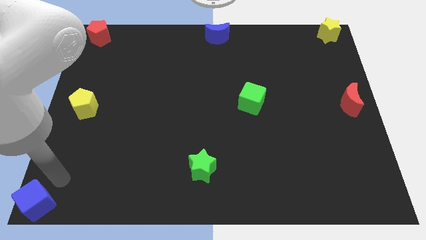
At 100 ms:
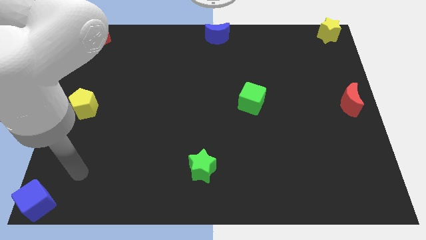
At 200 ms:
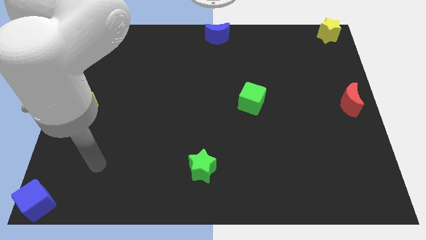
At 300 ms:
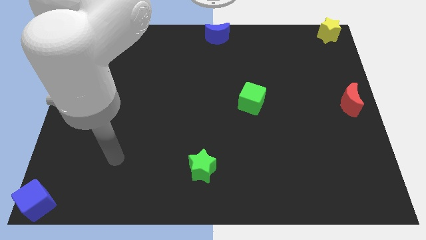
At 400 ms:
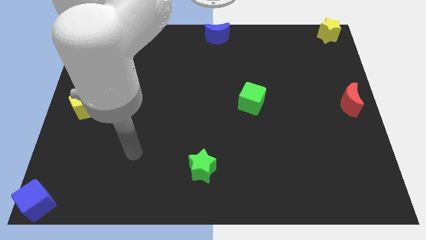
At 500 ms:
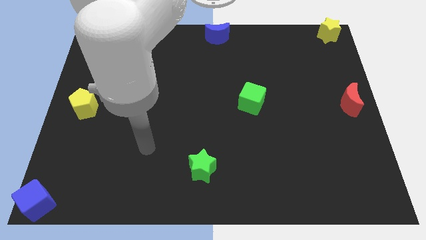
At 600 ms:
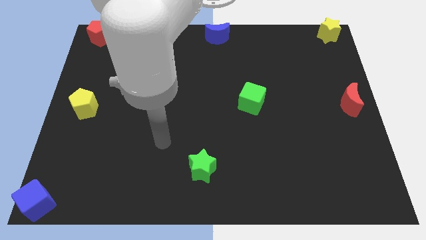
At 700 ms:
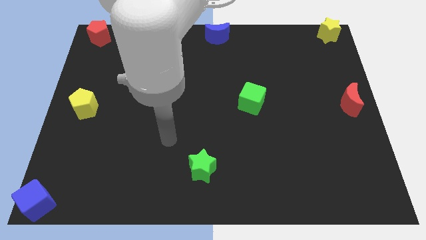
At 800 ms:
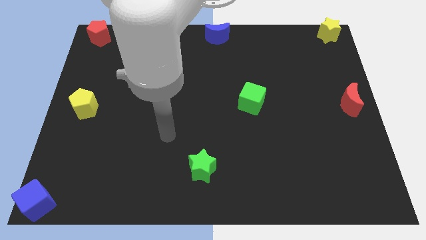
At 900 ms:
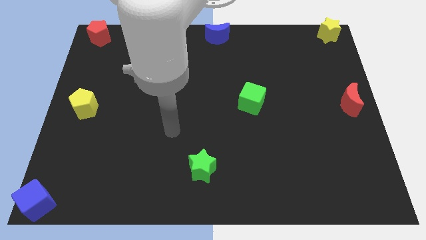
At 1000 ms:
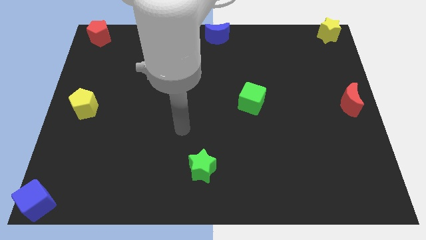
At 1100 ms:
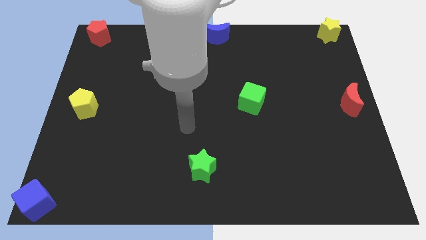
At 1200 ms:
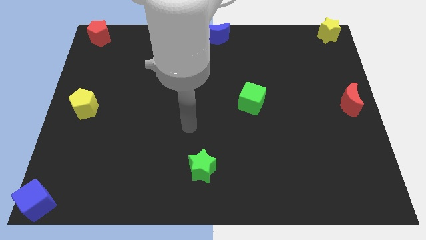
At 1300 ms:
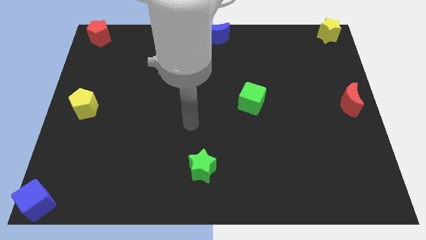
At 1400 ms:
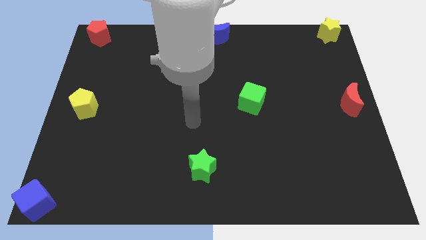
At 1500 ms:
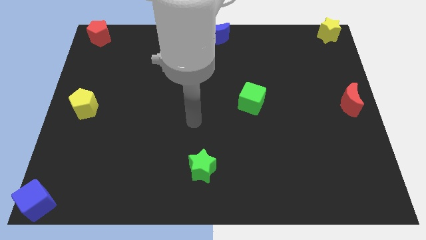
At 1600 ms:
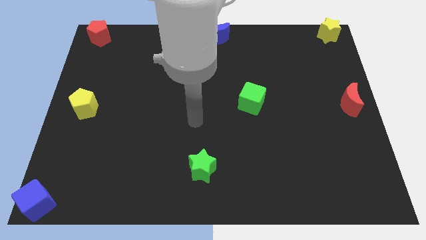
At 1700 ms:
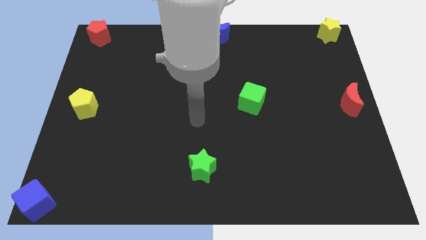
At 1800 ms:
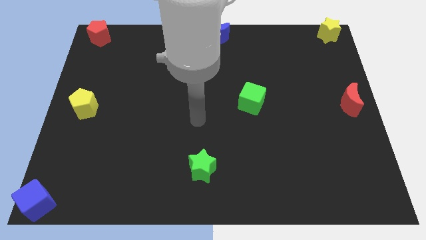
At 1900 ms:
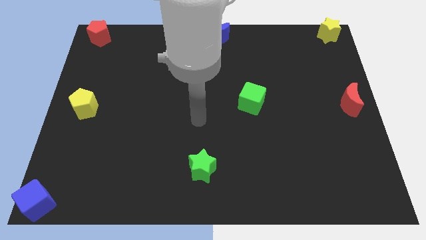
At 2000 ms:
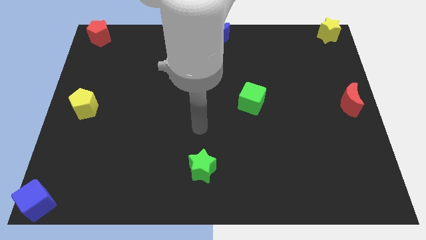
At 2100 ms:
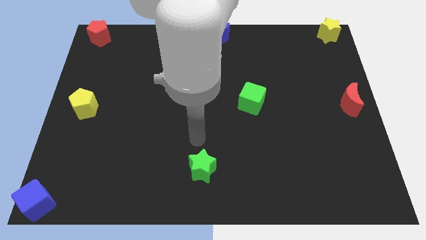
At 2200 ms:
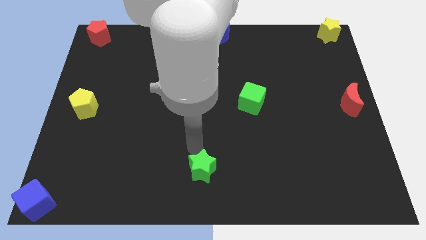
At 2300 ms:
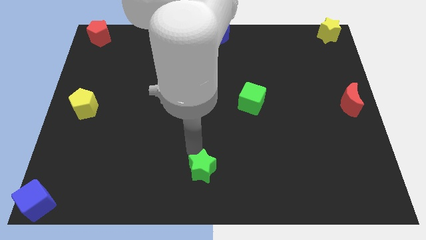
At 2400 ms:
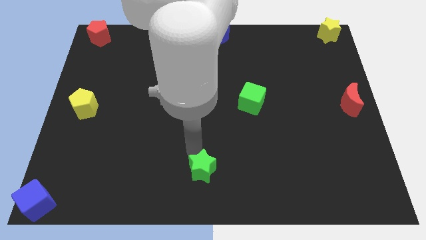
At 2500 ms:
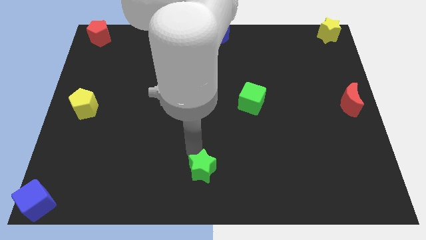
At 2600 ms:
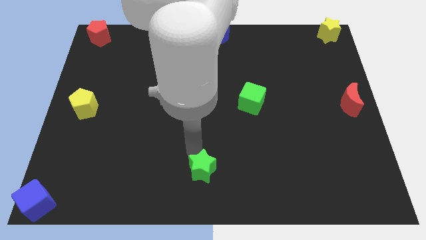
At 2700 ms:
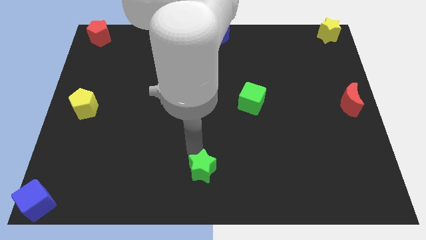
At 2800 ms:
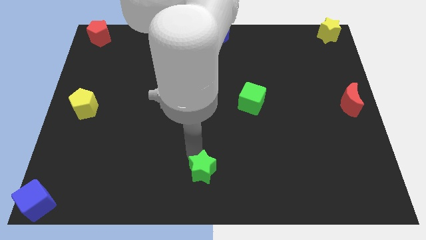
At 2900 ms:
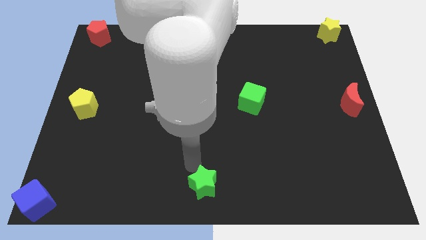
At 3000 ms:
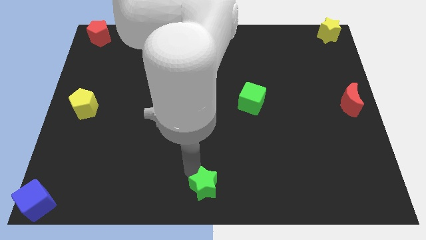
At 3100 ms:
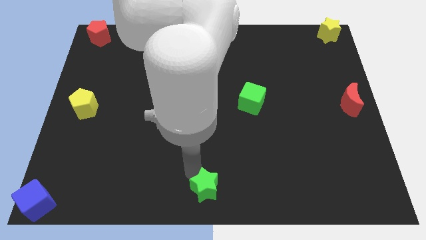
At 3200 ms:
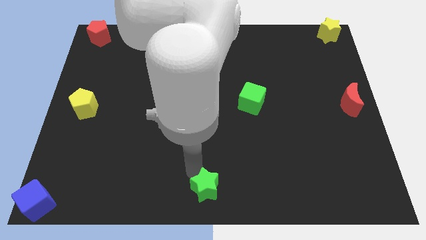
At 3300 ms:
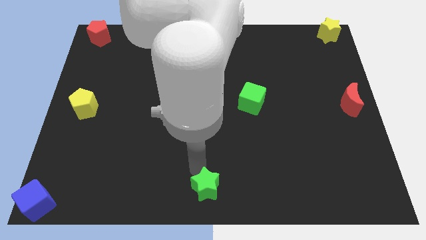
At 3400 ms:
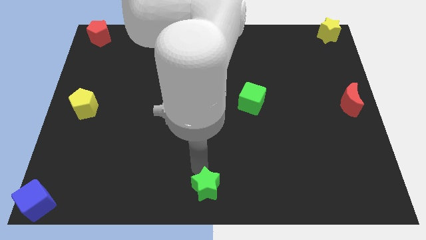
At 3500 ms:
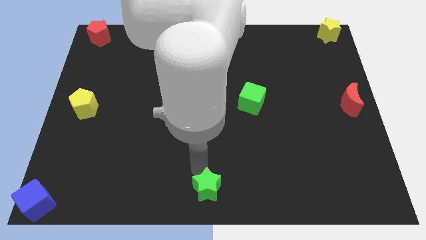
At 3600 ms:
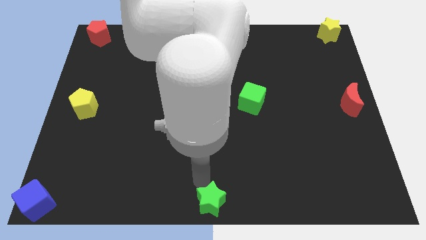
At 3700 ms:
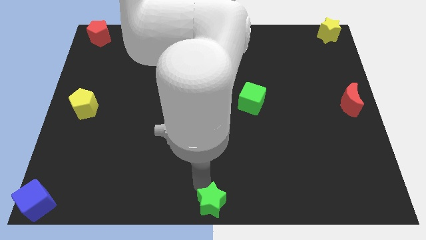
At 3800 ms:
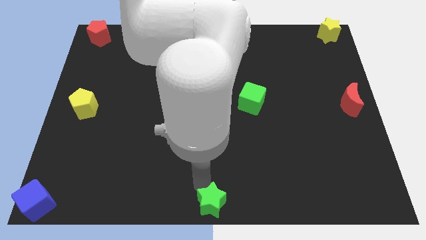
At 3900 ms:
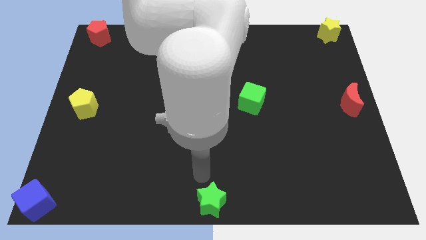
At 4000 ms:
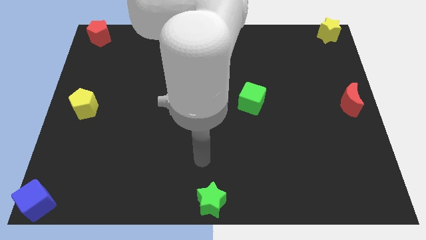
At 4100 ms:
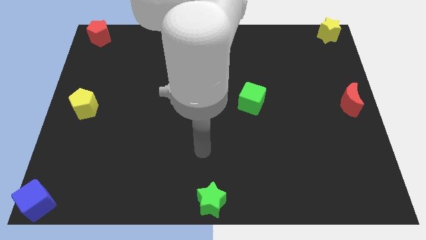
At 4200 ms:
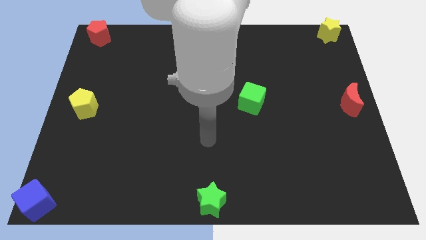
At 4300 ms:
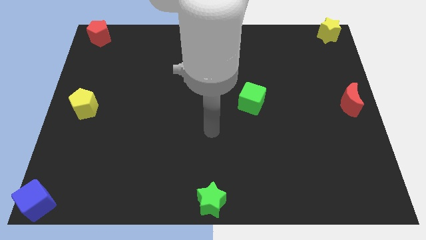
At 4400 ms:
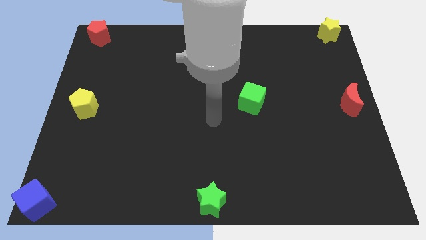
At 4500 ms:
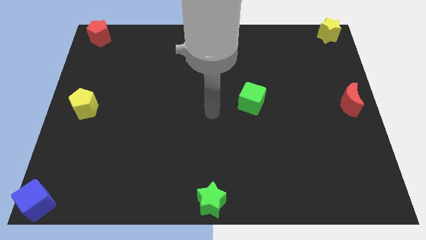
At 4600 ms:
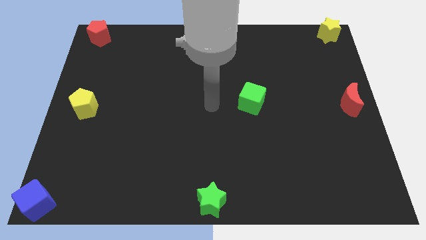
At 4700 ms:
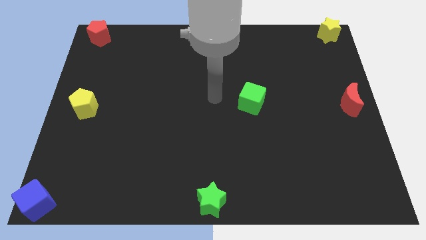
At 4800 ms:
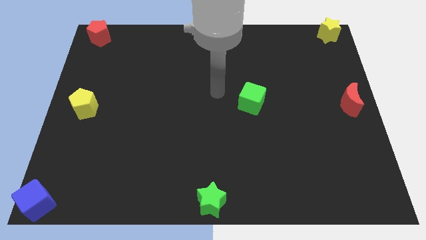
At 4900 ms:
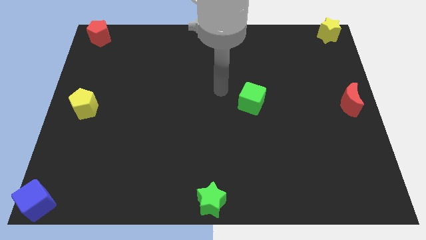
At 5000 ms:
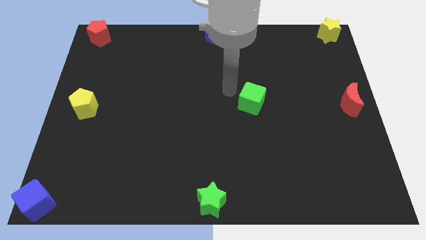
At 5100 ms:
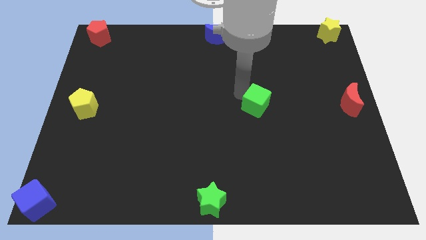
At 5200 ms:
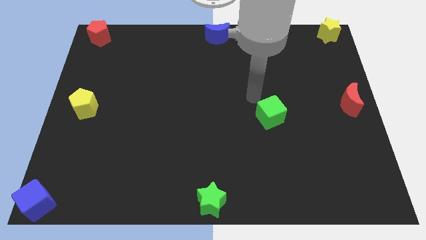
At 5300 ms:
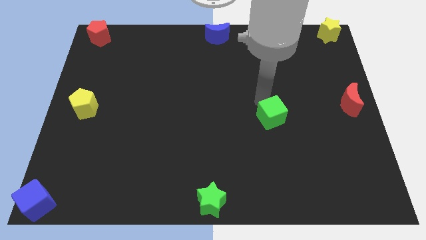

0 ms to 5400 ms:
push the green star towards the bottom center of the board

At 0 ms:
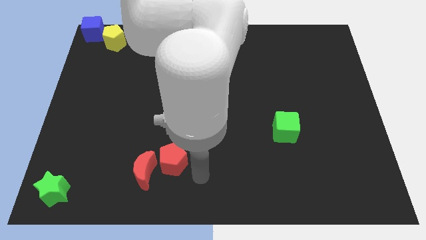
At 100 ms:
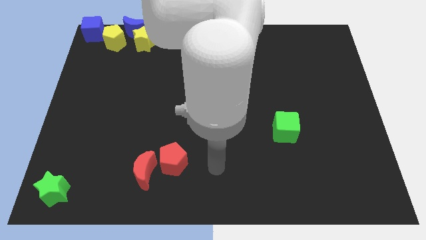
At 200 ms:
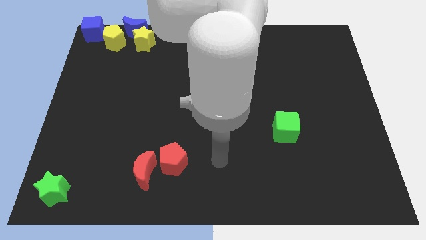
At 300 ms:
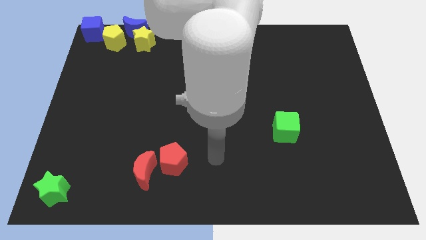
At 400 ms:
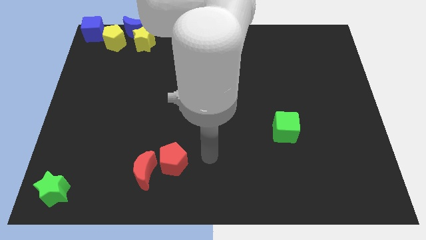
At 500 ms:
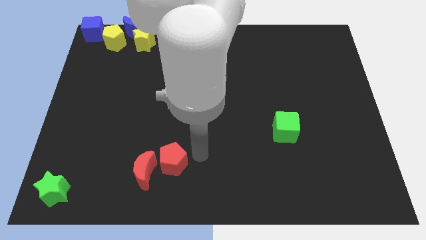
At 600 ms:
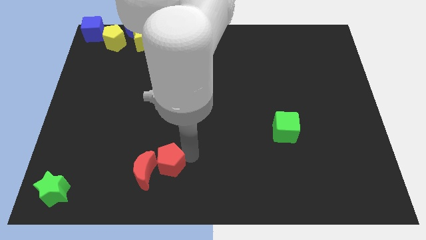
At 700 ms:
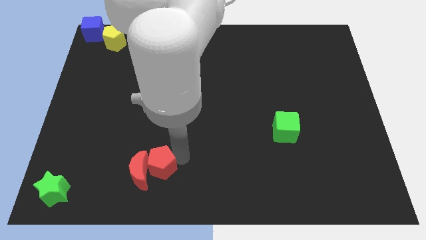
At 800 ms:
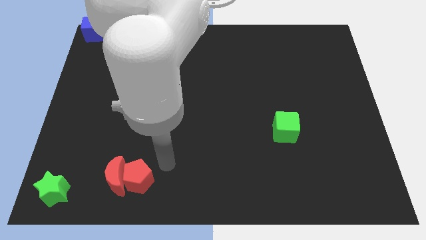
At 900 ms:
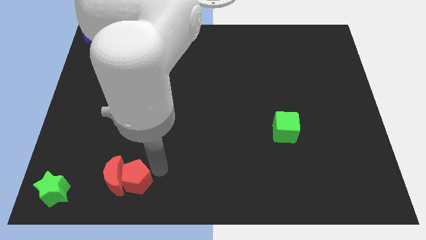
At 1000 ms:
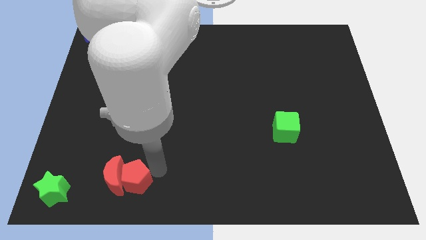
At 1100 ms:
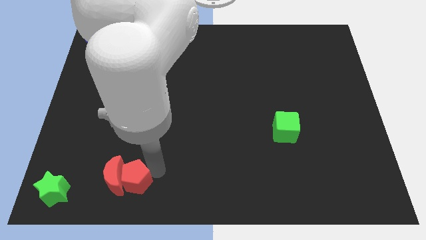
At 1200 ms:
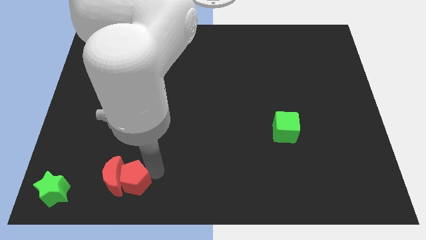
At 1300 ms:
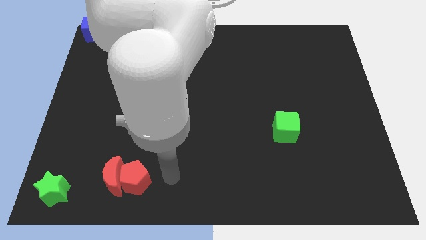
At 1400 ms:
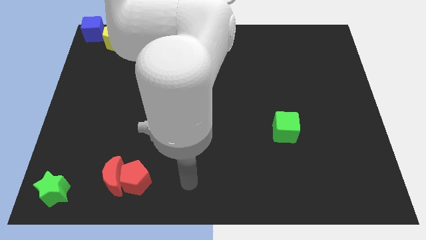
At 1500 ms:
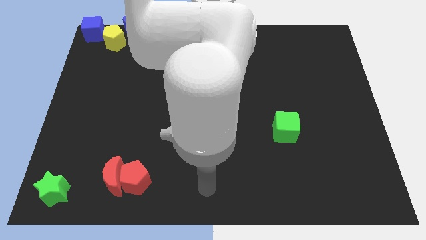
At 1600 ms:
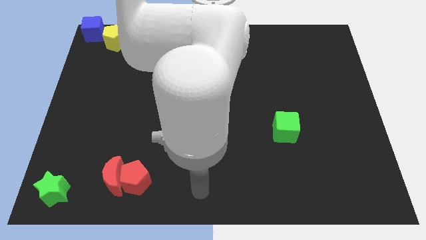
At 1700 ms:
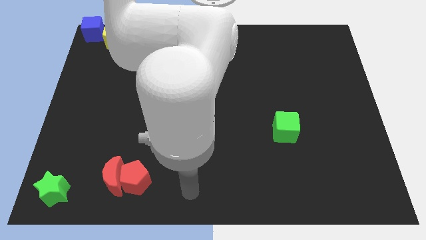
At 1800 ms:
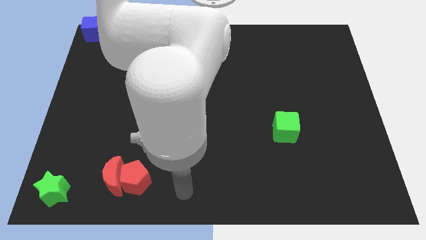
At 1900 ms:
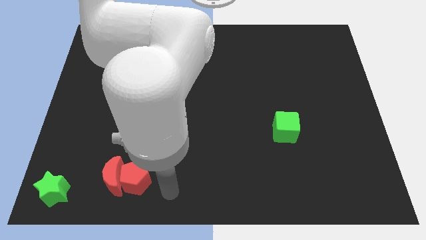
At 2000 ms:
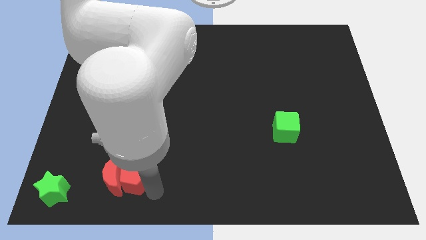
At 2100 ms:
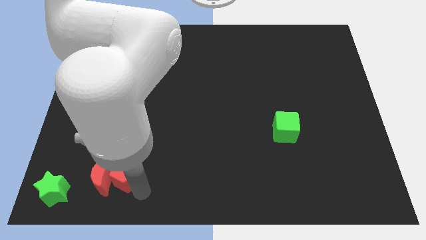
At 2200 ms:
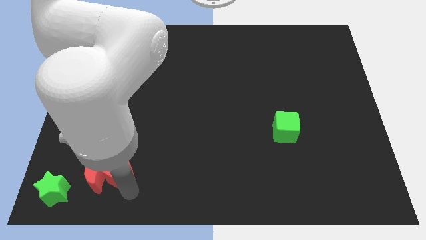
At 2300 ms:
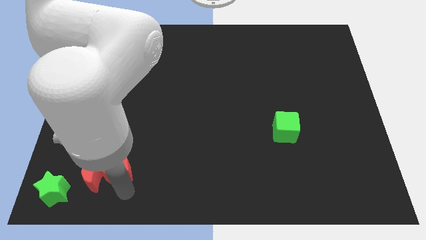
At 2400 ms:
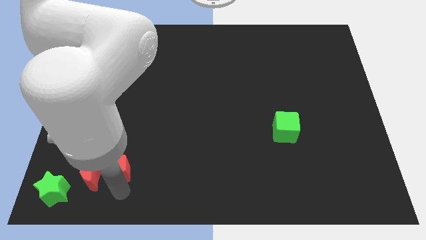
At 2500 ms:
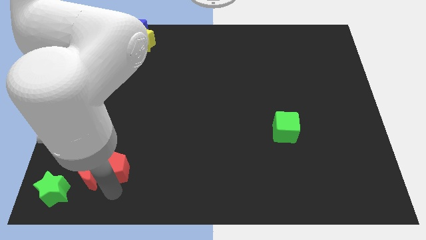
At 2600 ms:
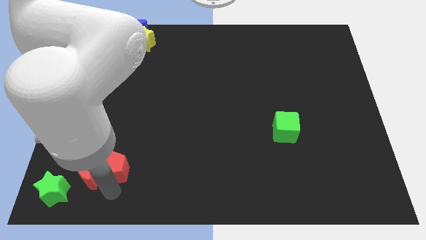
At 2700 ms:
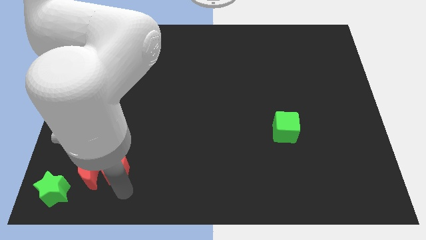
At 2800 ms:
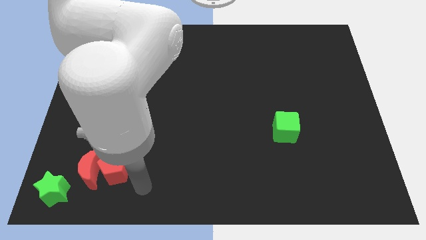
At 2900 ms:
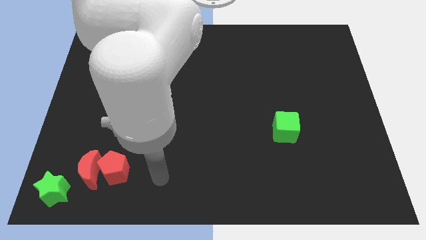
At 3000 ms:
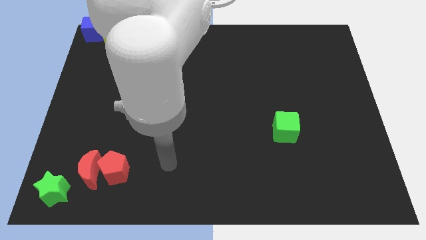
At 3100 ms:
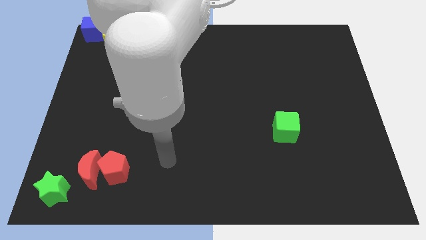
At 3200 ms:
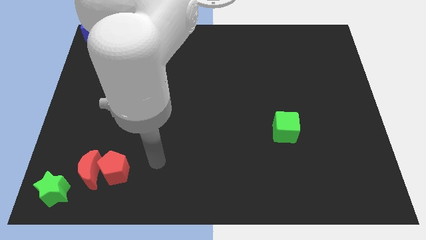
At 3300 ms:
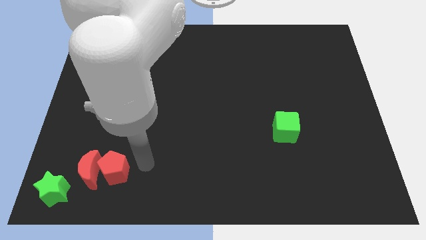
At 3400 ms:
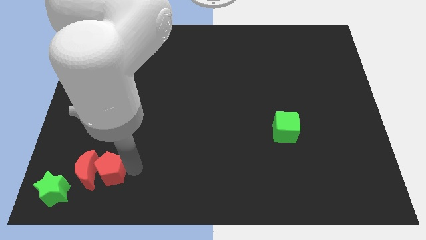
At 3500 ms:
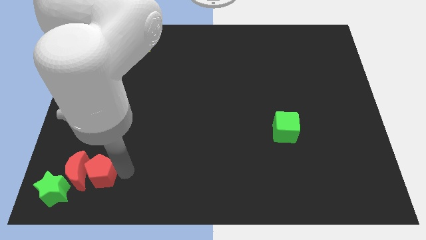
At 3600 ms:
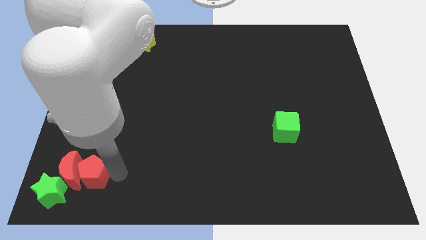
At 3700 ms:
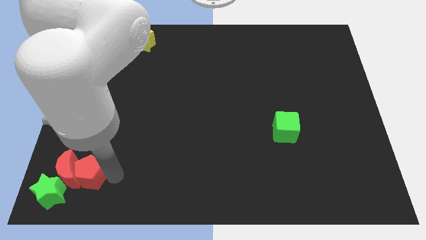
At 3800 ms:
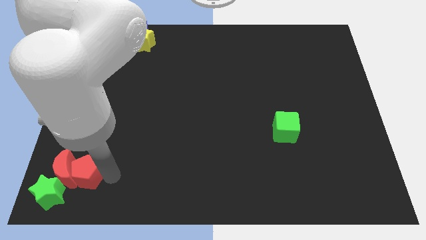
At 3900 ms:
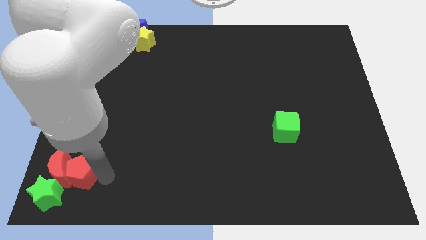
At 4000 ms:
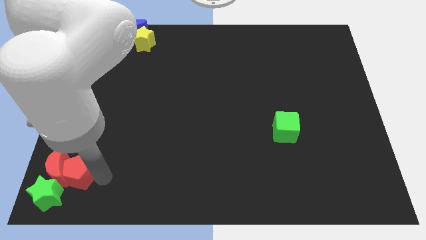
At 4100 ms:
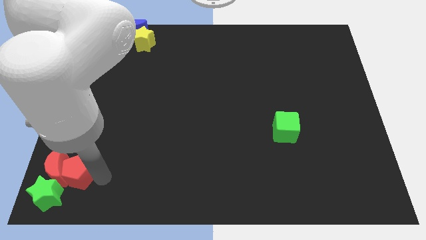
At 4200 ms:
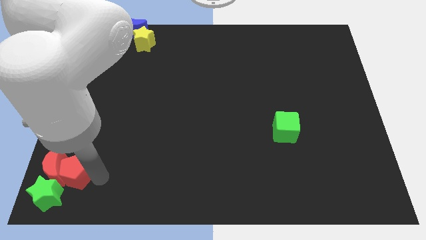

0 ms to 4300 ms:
push the both red blocks into the green star
